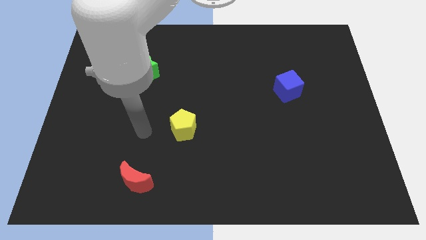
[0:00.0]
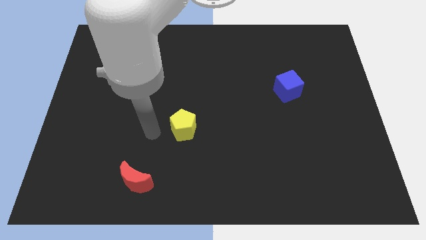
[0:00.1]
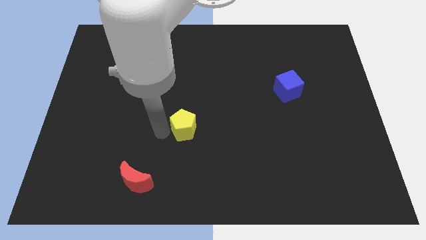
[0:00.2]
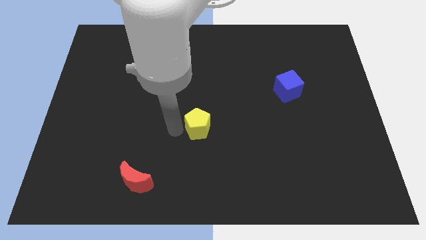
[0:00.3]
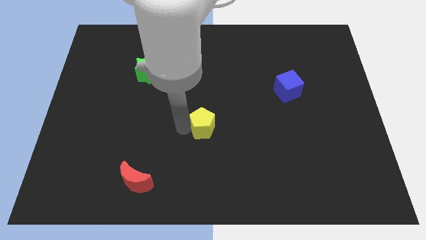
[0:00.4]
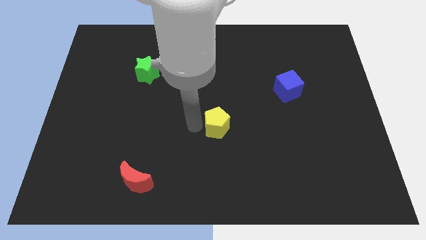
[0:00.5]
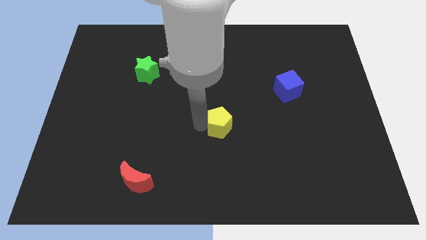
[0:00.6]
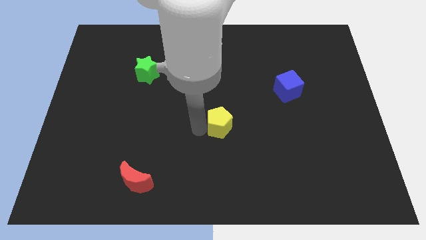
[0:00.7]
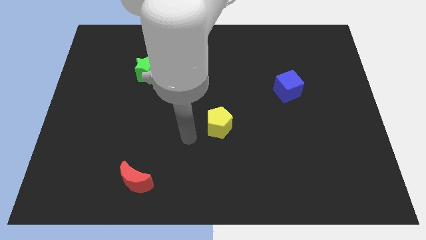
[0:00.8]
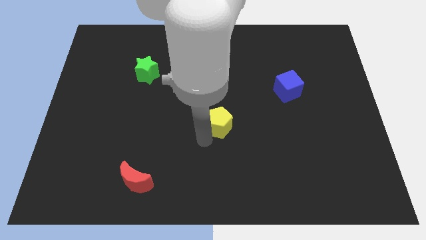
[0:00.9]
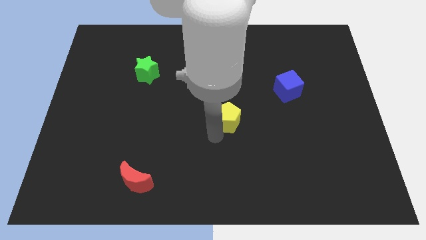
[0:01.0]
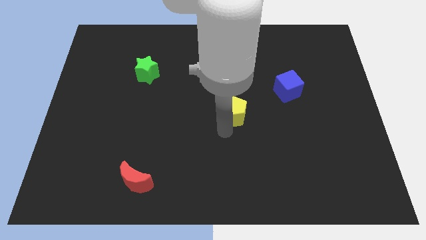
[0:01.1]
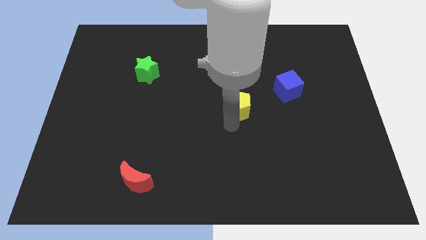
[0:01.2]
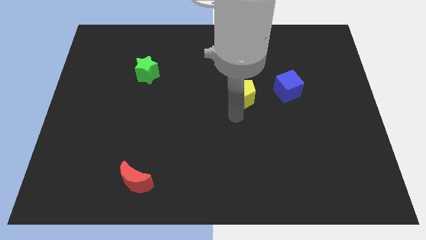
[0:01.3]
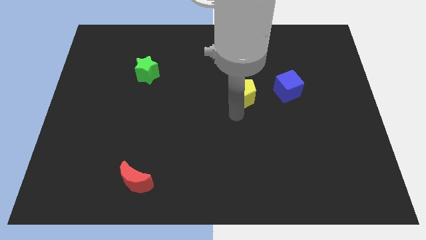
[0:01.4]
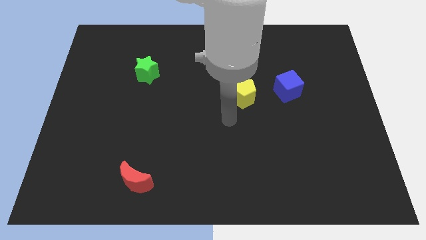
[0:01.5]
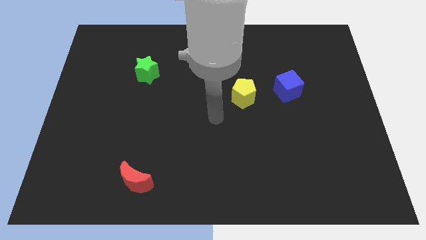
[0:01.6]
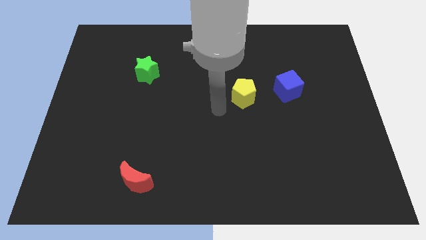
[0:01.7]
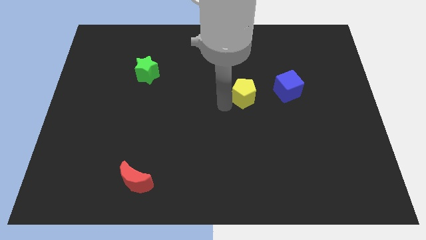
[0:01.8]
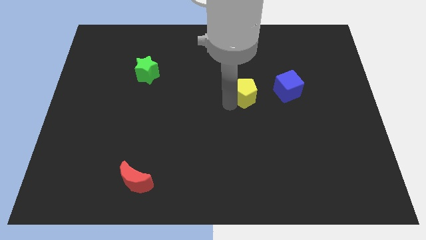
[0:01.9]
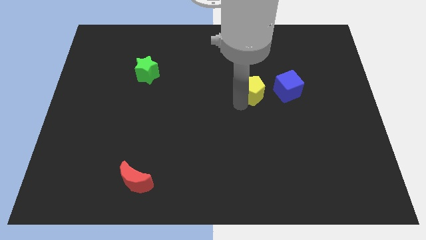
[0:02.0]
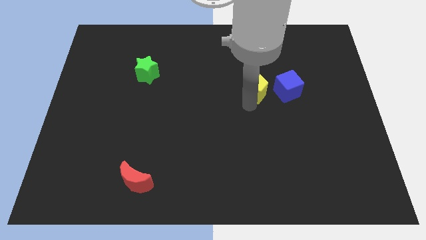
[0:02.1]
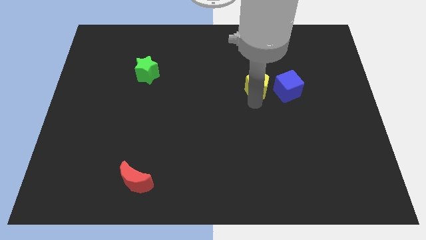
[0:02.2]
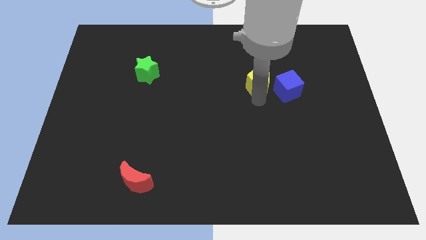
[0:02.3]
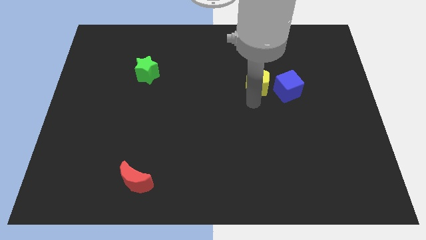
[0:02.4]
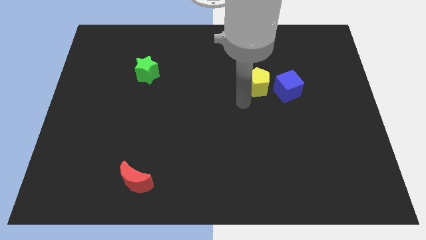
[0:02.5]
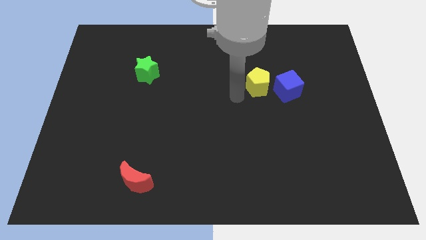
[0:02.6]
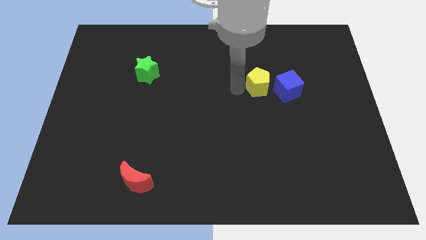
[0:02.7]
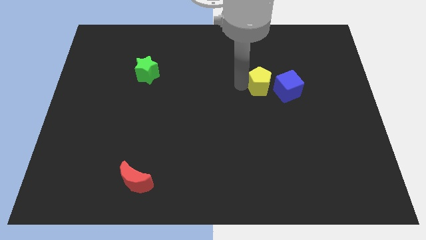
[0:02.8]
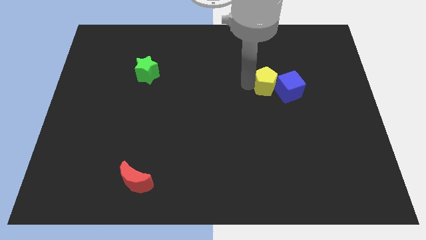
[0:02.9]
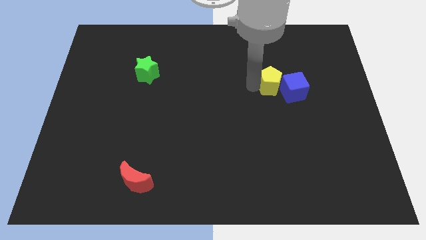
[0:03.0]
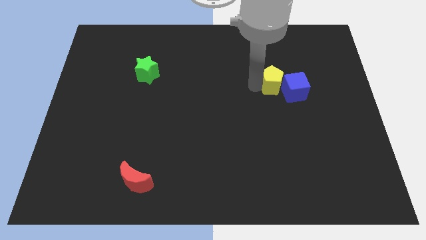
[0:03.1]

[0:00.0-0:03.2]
push the pentagon next to the blue cube

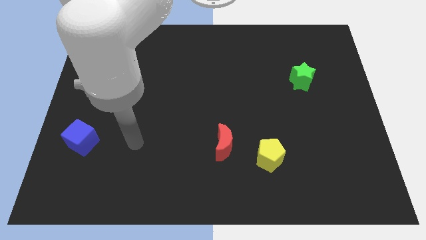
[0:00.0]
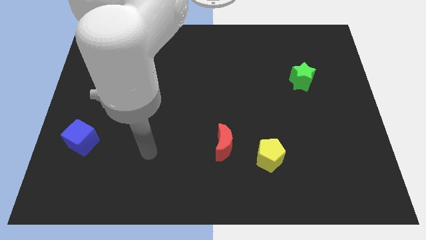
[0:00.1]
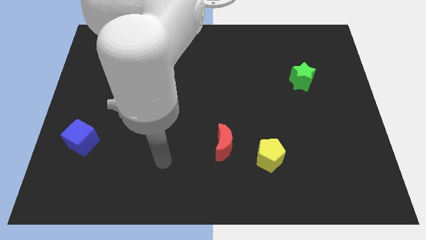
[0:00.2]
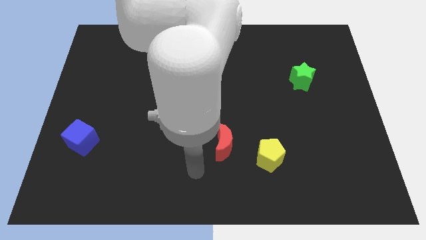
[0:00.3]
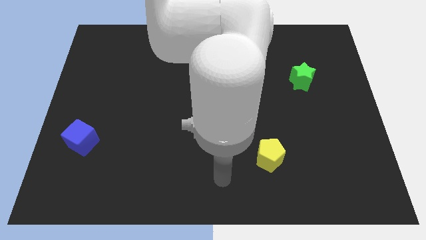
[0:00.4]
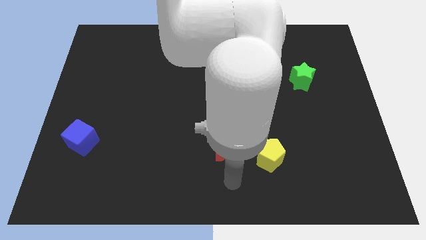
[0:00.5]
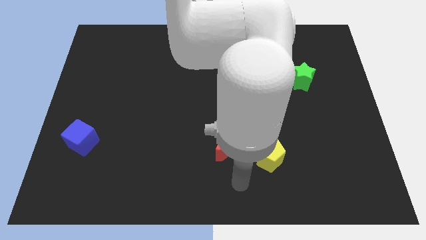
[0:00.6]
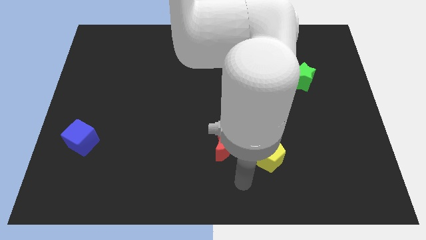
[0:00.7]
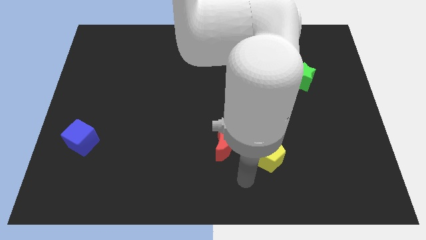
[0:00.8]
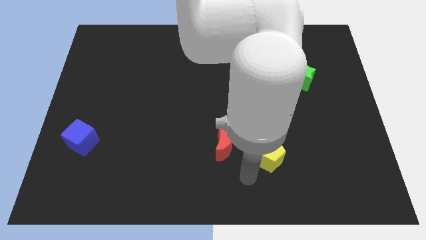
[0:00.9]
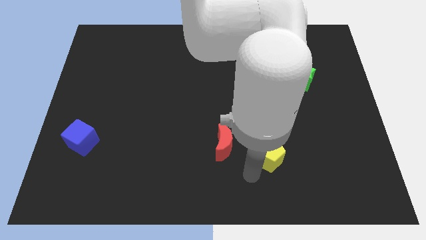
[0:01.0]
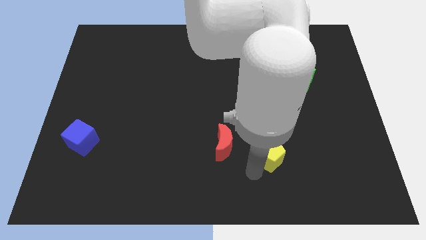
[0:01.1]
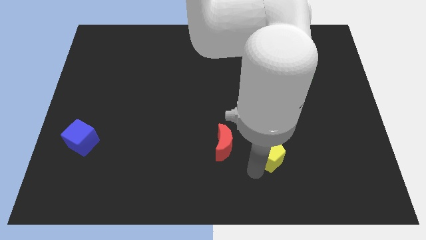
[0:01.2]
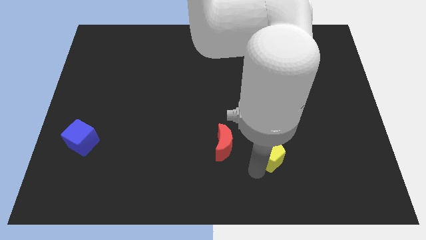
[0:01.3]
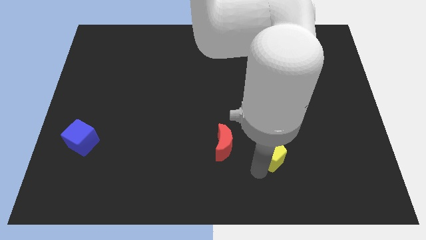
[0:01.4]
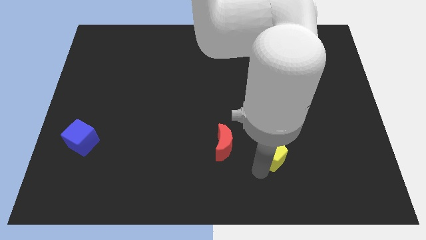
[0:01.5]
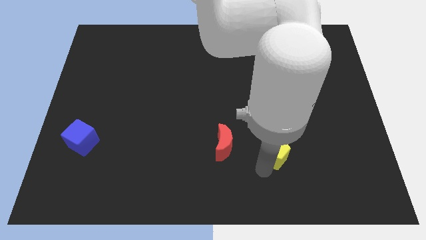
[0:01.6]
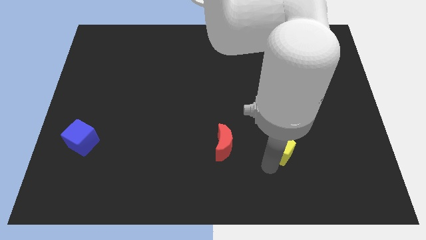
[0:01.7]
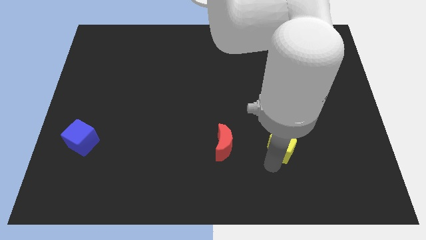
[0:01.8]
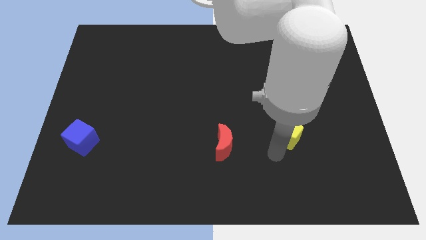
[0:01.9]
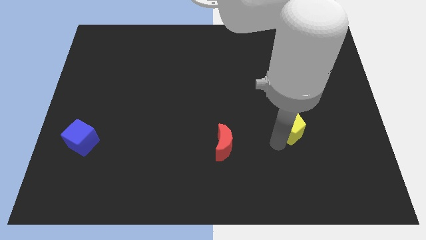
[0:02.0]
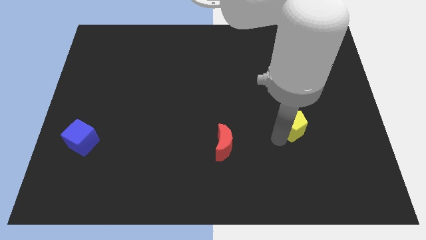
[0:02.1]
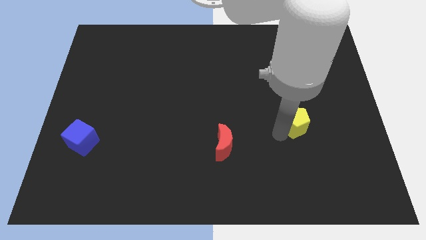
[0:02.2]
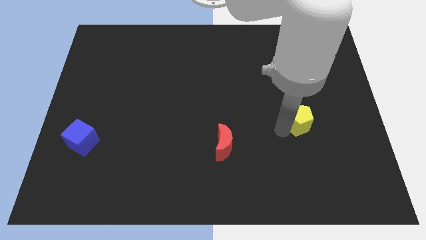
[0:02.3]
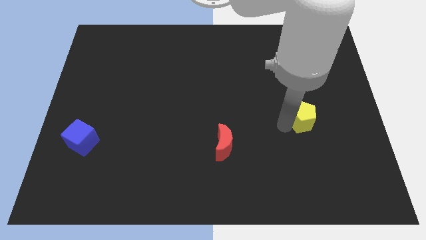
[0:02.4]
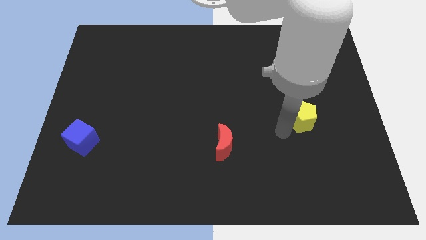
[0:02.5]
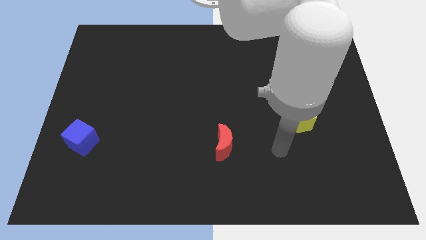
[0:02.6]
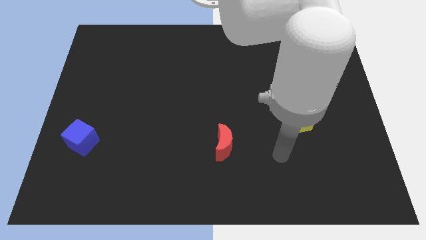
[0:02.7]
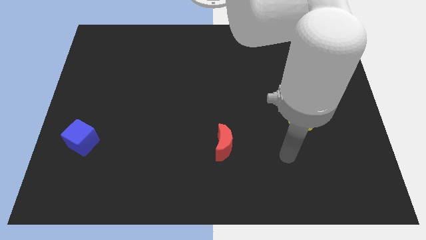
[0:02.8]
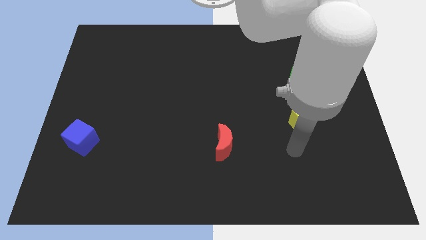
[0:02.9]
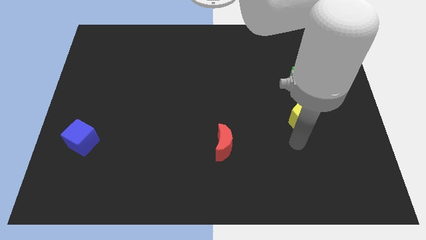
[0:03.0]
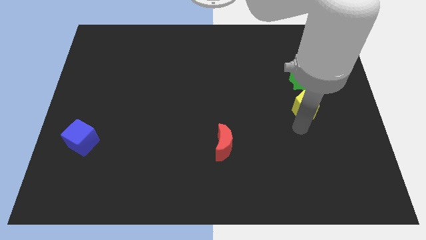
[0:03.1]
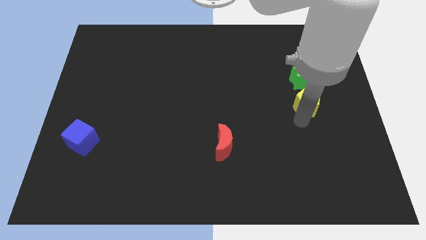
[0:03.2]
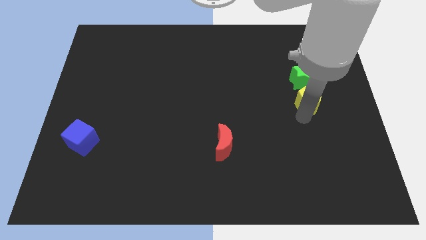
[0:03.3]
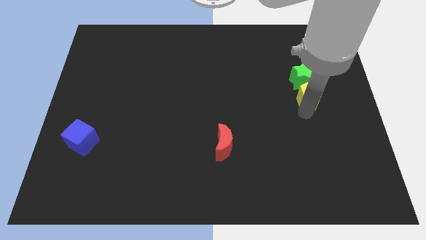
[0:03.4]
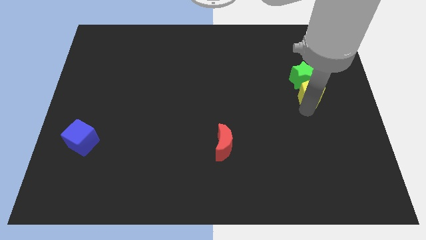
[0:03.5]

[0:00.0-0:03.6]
move the yellow block next to the star

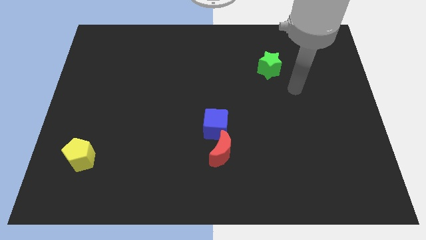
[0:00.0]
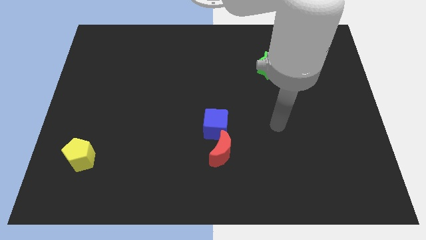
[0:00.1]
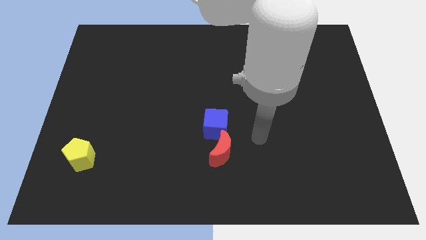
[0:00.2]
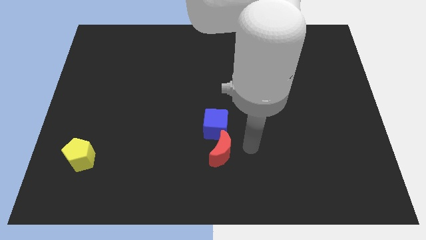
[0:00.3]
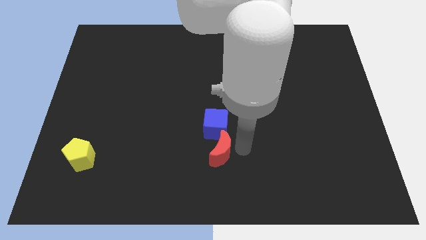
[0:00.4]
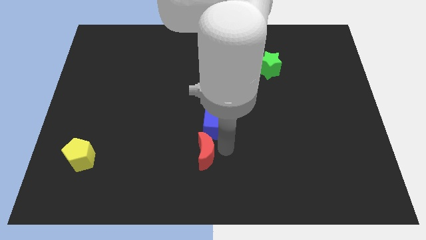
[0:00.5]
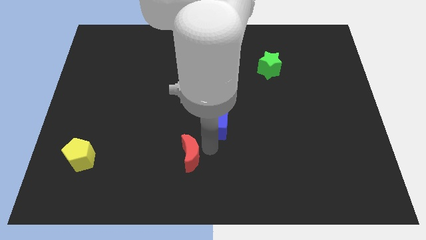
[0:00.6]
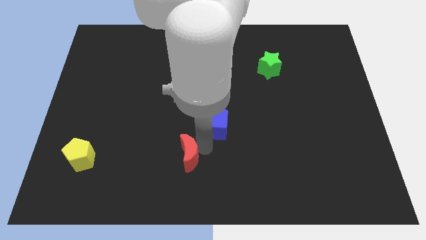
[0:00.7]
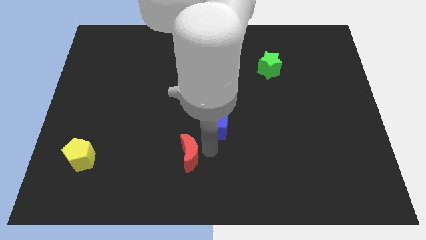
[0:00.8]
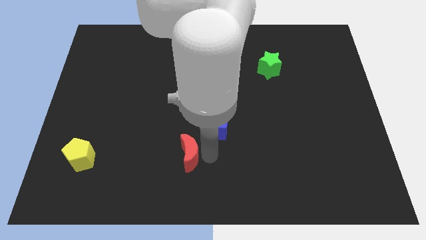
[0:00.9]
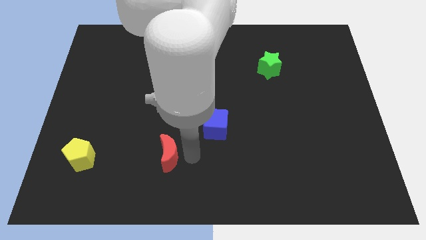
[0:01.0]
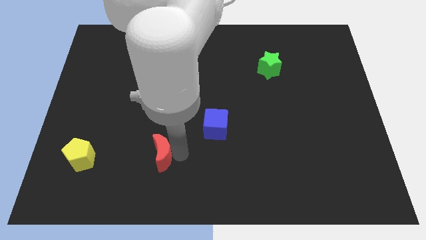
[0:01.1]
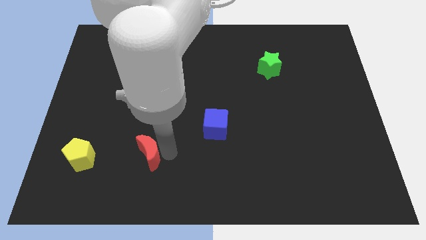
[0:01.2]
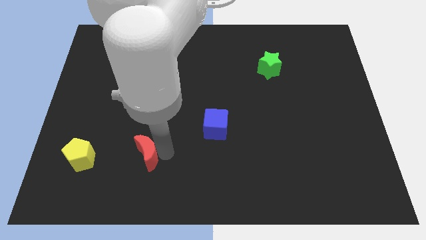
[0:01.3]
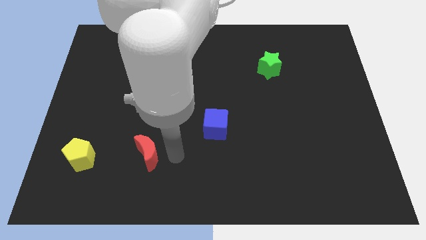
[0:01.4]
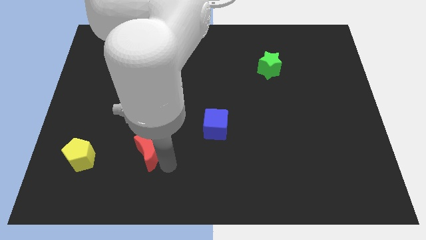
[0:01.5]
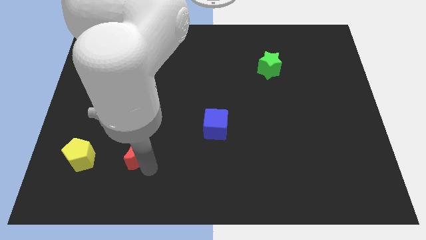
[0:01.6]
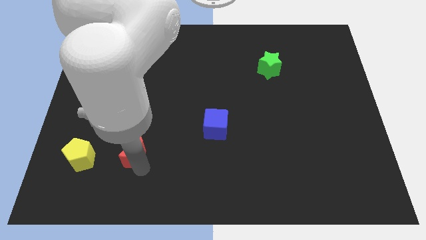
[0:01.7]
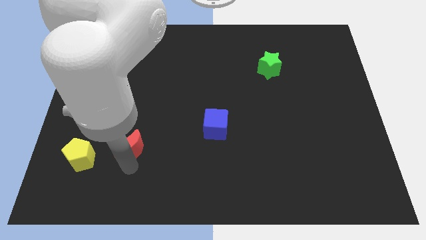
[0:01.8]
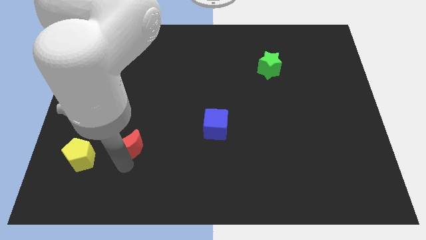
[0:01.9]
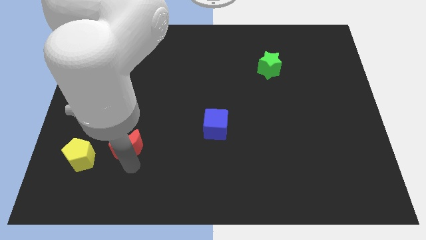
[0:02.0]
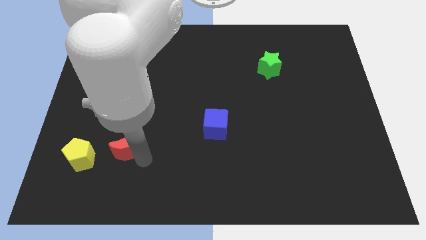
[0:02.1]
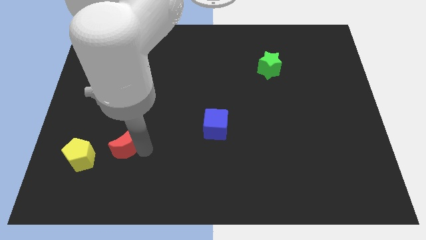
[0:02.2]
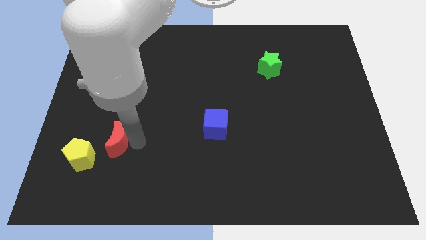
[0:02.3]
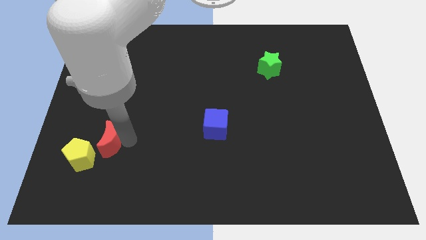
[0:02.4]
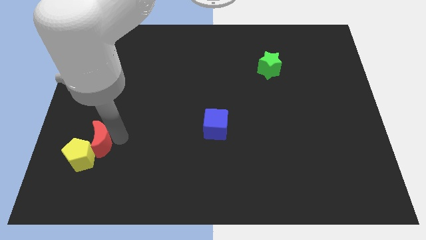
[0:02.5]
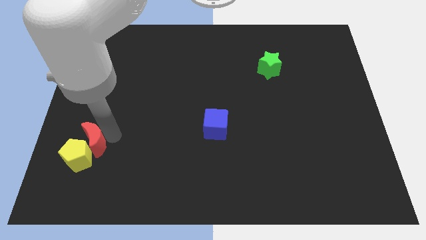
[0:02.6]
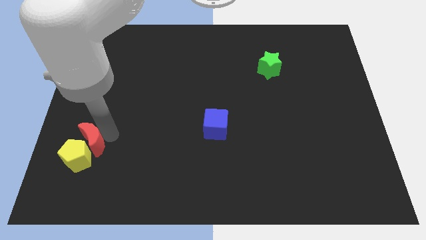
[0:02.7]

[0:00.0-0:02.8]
slide the red block next to the yellow block
